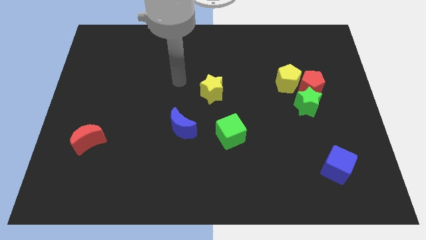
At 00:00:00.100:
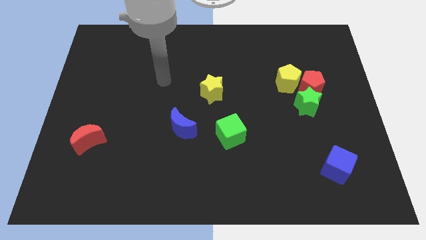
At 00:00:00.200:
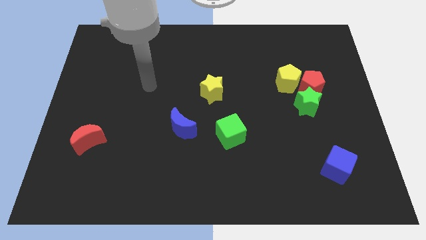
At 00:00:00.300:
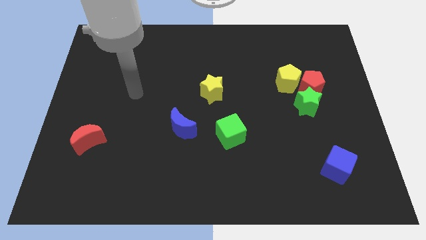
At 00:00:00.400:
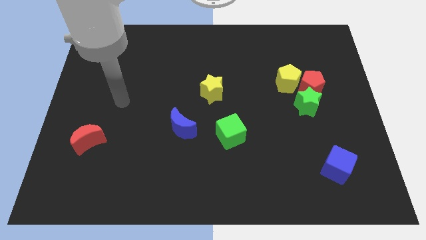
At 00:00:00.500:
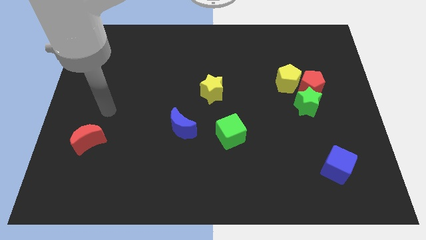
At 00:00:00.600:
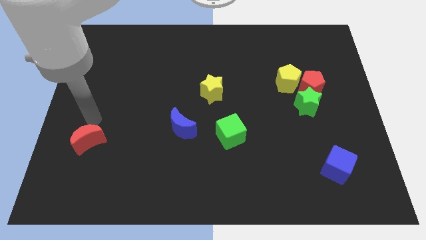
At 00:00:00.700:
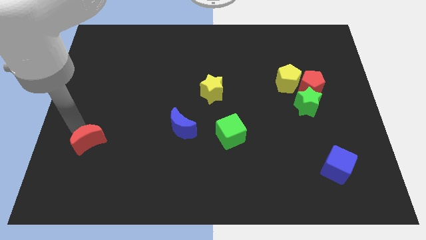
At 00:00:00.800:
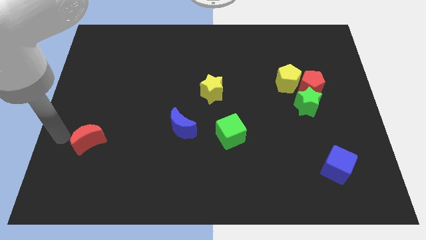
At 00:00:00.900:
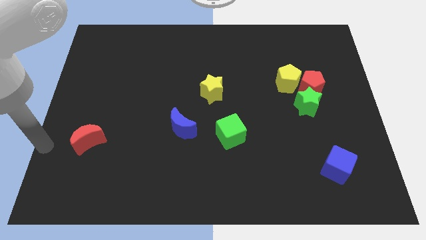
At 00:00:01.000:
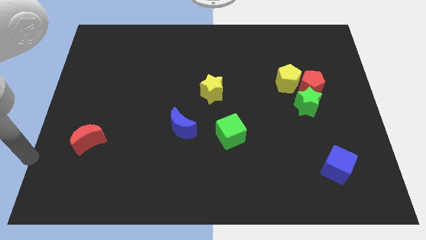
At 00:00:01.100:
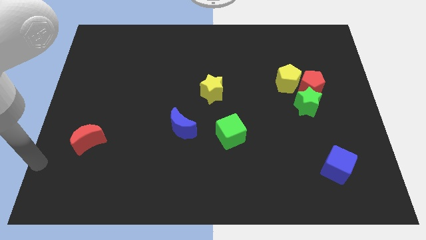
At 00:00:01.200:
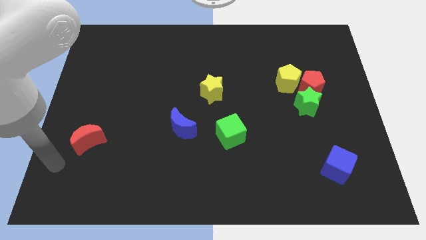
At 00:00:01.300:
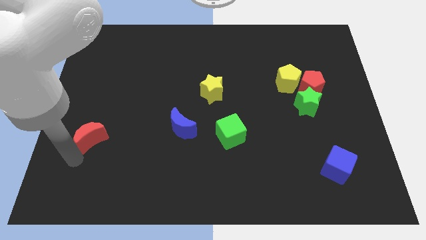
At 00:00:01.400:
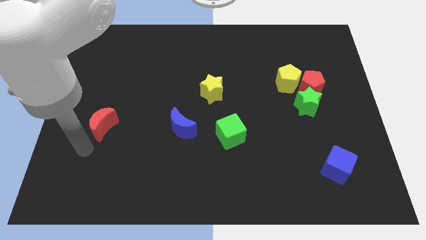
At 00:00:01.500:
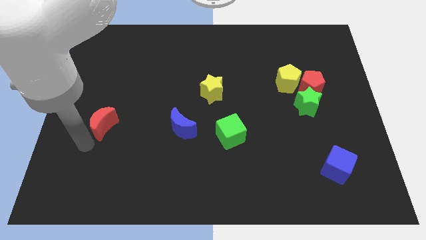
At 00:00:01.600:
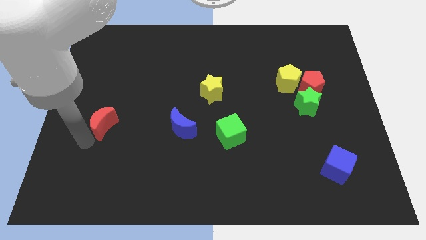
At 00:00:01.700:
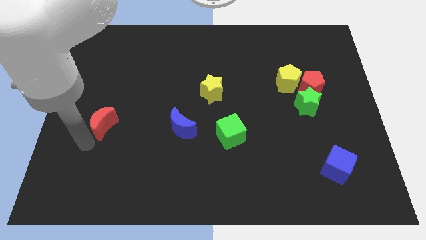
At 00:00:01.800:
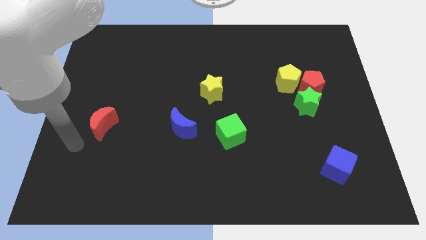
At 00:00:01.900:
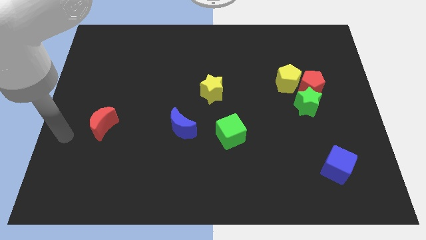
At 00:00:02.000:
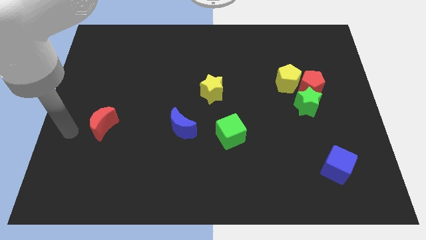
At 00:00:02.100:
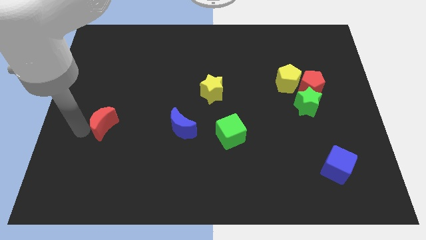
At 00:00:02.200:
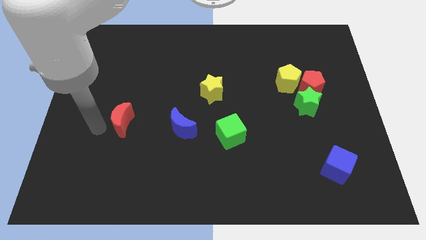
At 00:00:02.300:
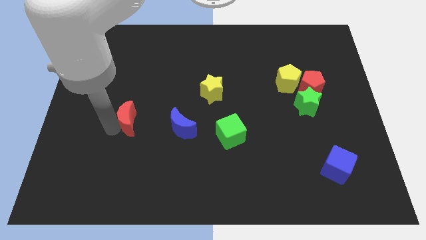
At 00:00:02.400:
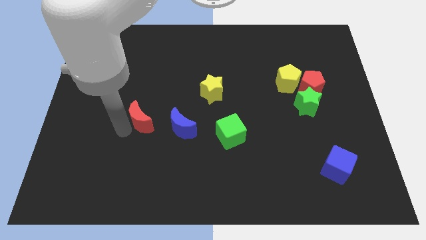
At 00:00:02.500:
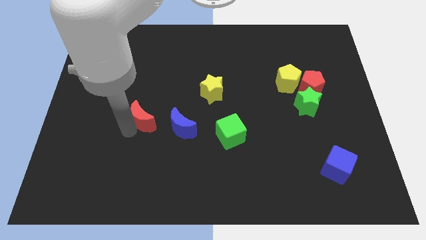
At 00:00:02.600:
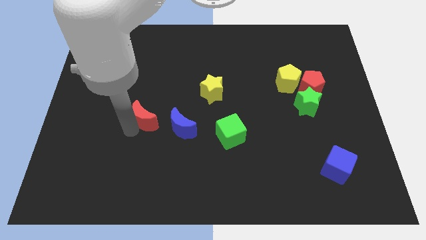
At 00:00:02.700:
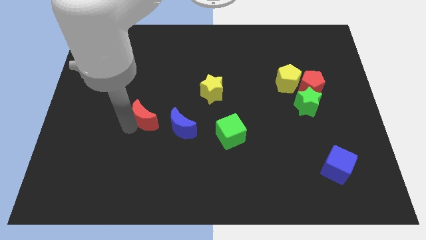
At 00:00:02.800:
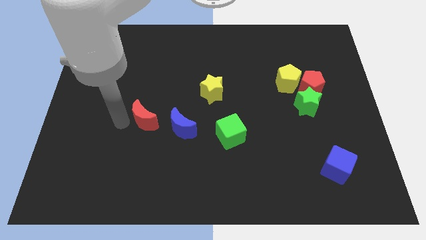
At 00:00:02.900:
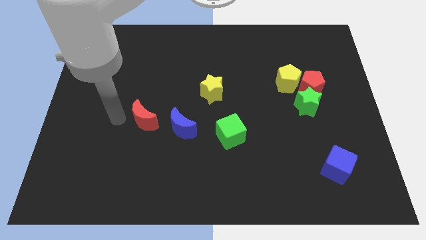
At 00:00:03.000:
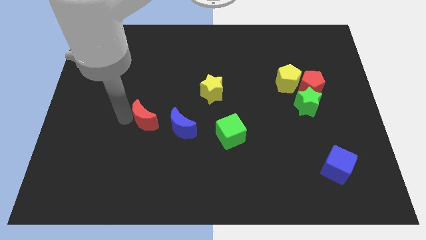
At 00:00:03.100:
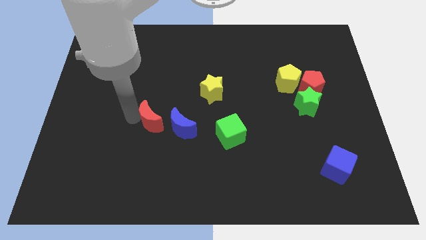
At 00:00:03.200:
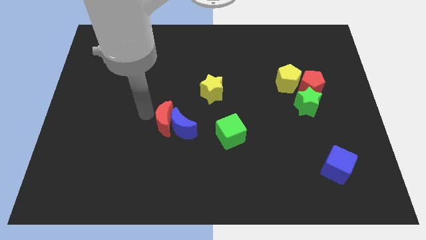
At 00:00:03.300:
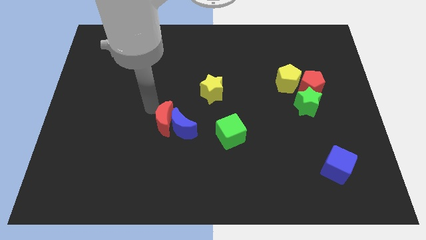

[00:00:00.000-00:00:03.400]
make the red crescent to touch the left side of the blue crescent

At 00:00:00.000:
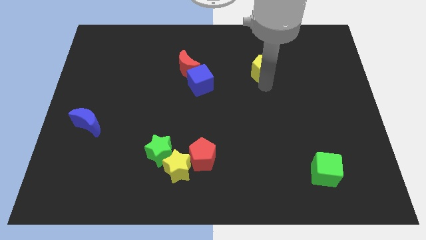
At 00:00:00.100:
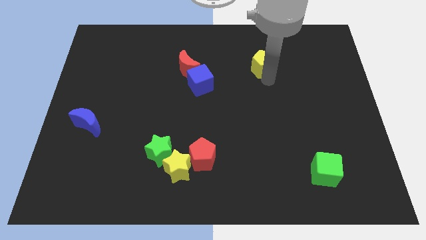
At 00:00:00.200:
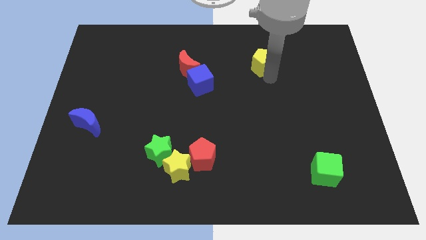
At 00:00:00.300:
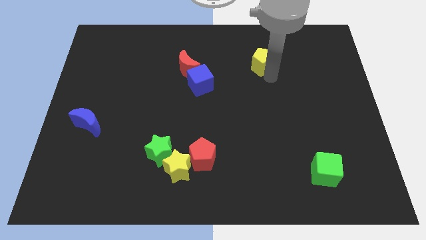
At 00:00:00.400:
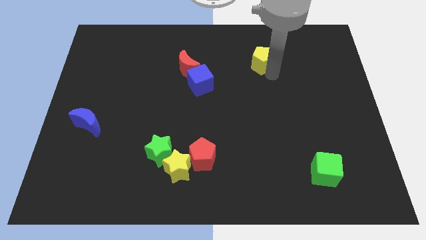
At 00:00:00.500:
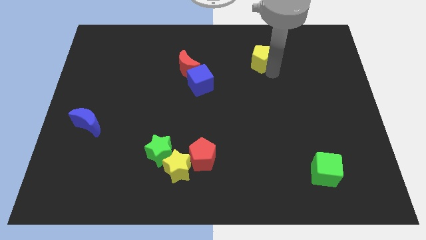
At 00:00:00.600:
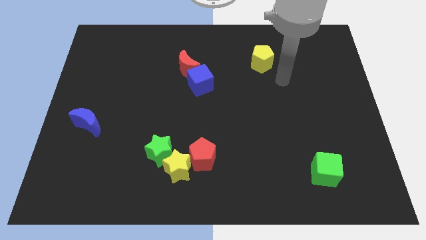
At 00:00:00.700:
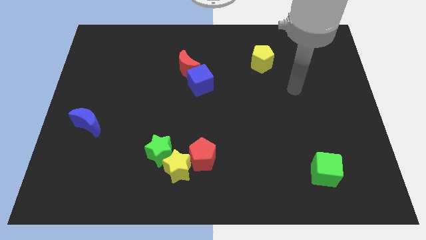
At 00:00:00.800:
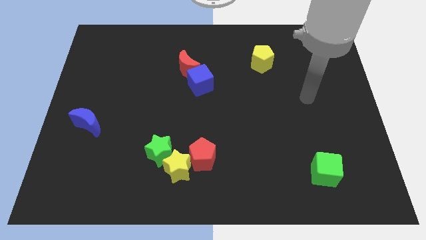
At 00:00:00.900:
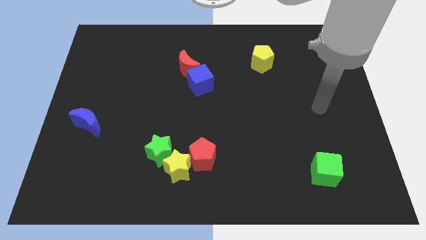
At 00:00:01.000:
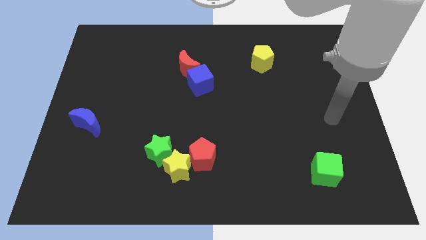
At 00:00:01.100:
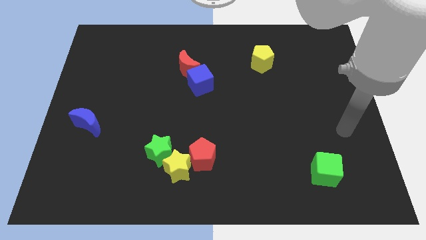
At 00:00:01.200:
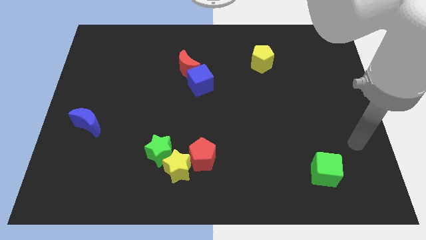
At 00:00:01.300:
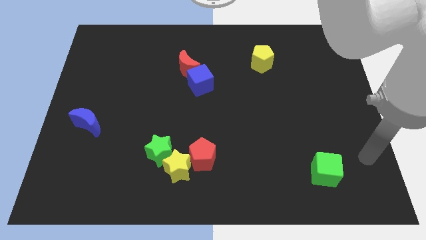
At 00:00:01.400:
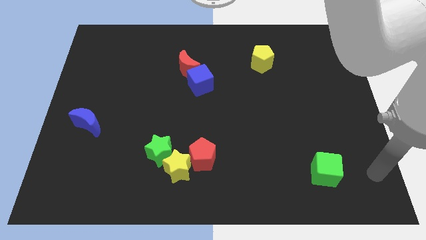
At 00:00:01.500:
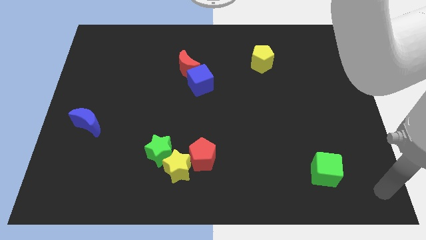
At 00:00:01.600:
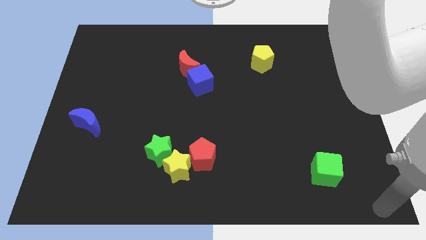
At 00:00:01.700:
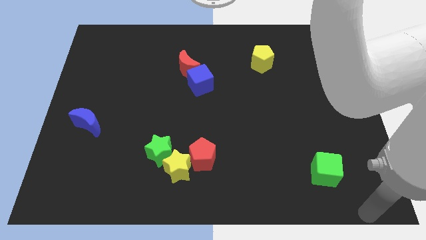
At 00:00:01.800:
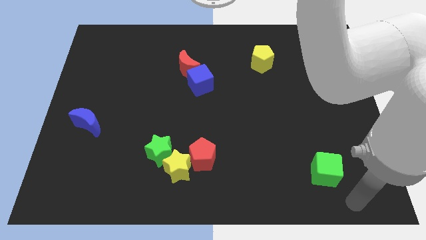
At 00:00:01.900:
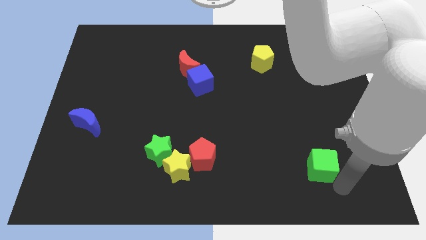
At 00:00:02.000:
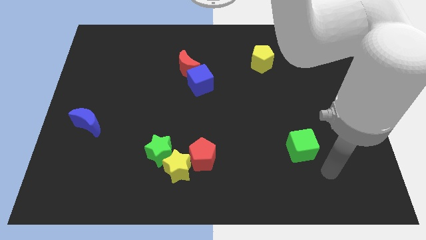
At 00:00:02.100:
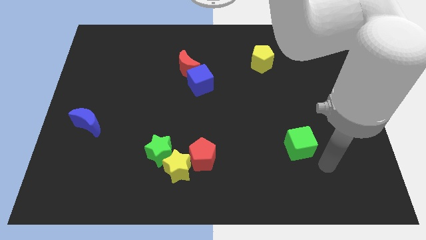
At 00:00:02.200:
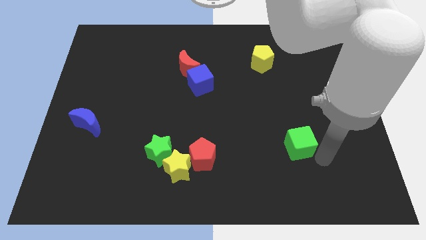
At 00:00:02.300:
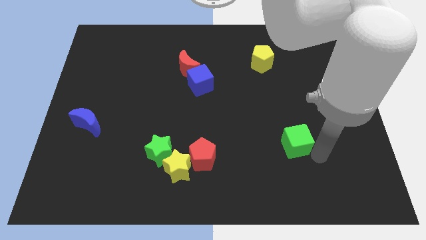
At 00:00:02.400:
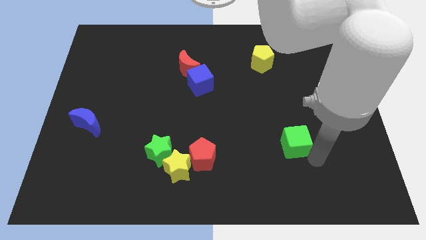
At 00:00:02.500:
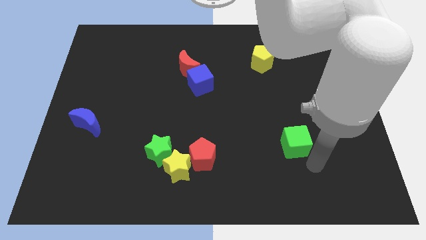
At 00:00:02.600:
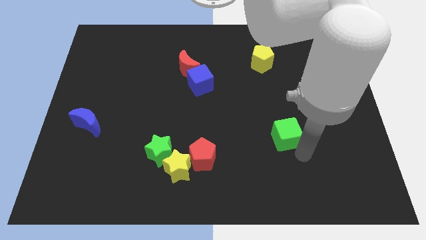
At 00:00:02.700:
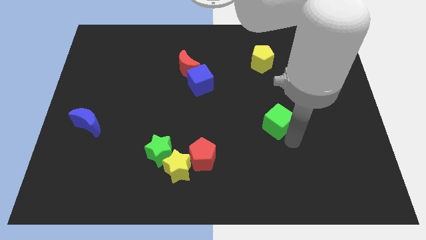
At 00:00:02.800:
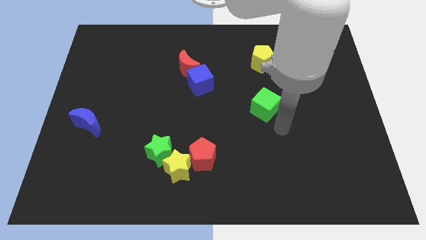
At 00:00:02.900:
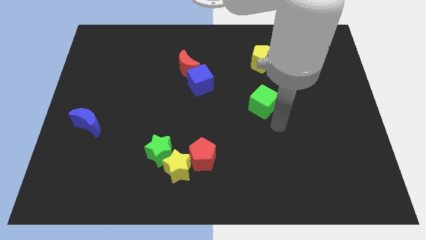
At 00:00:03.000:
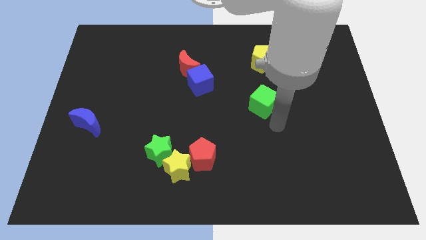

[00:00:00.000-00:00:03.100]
move the green cube below the yellow pentagon

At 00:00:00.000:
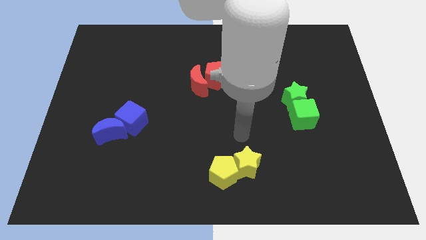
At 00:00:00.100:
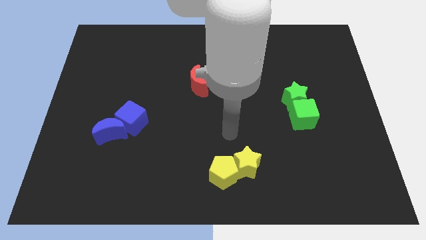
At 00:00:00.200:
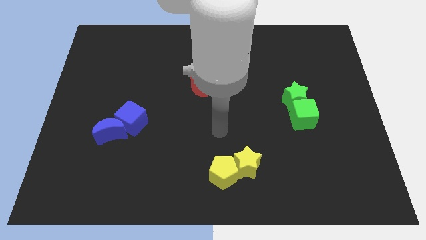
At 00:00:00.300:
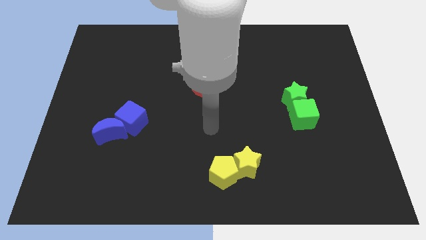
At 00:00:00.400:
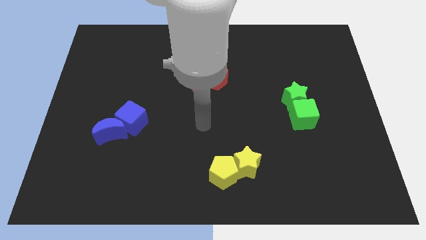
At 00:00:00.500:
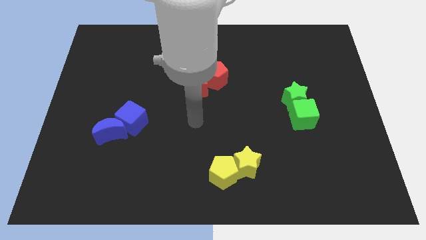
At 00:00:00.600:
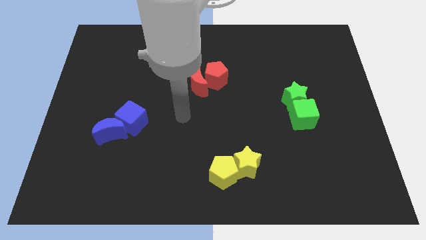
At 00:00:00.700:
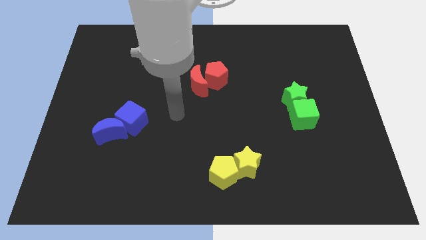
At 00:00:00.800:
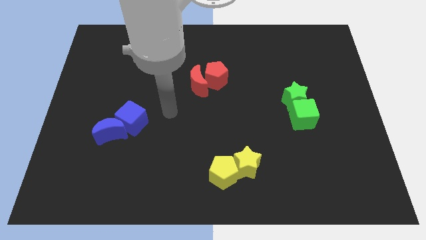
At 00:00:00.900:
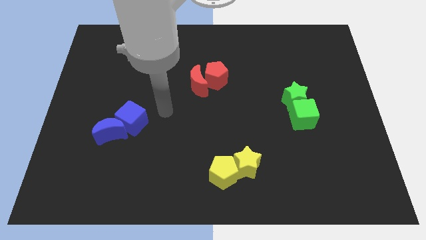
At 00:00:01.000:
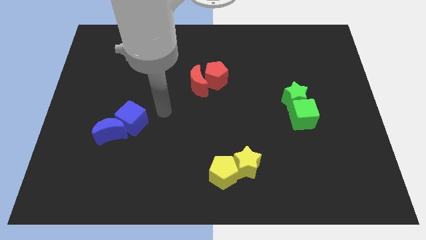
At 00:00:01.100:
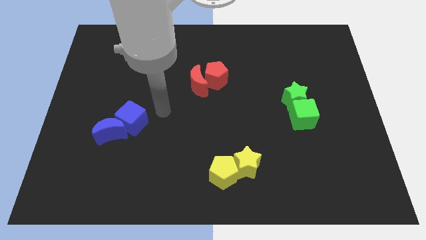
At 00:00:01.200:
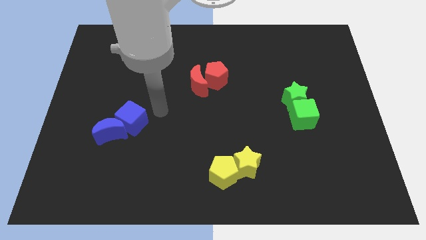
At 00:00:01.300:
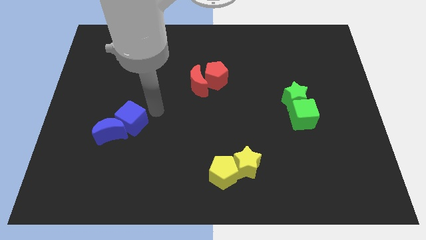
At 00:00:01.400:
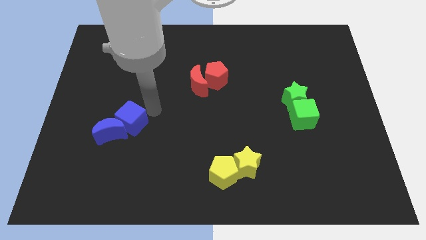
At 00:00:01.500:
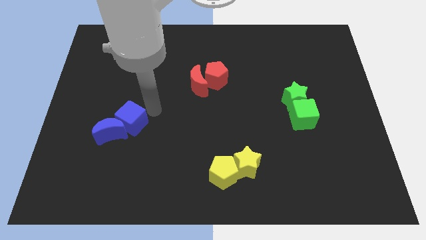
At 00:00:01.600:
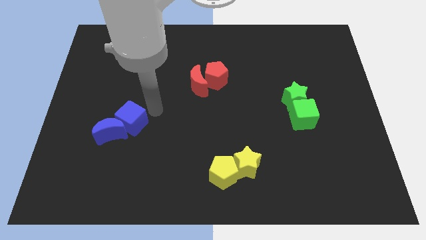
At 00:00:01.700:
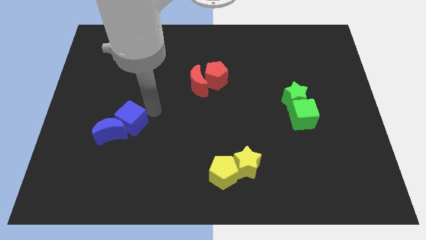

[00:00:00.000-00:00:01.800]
move your arm towards the blue cube

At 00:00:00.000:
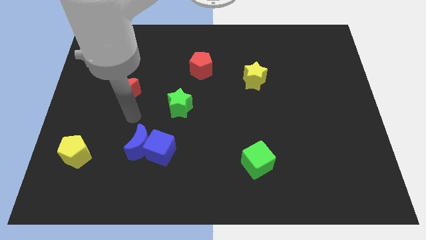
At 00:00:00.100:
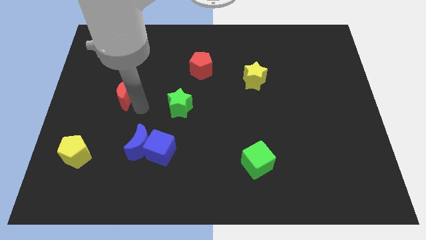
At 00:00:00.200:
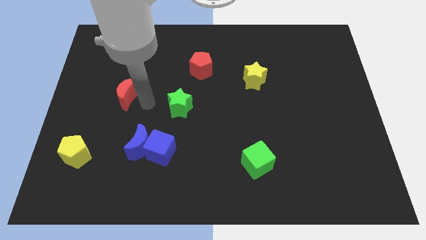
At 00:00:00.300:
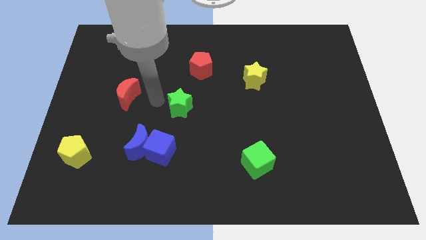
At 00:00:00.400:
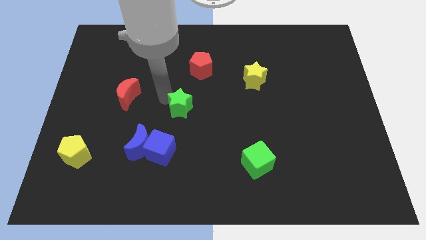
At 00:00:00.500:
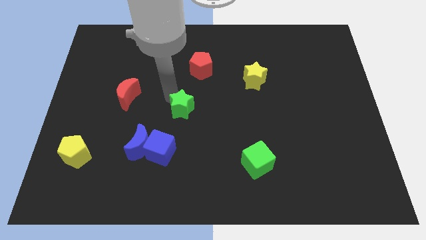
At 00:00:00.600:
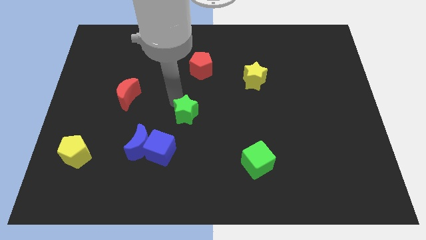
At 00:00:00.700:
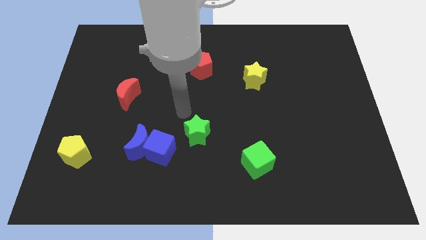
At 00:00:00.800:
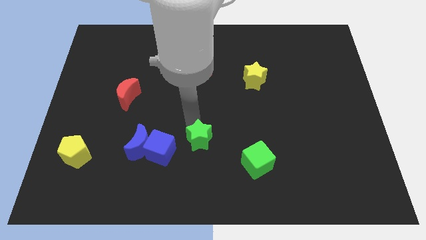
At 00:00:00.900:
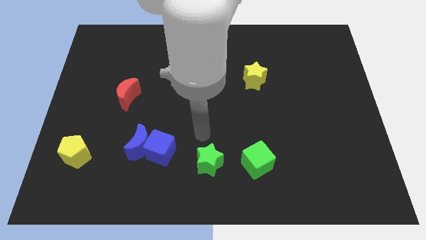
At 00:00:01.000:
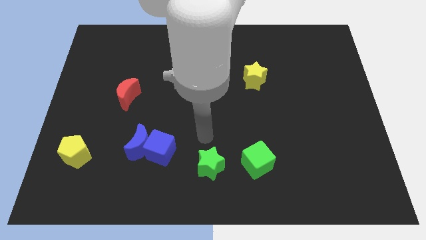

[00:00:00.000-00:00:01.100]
push the green star to the left of the green cube
